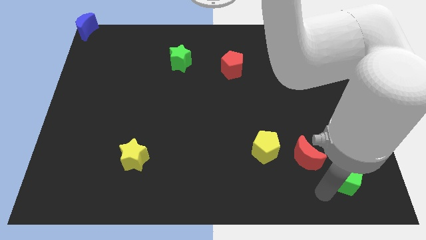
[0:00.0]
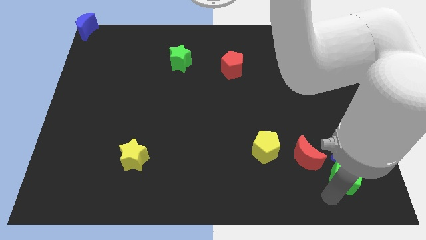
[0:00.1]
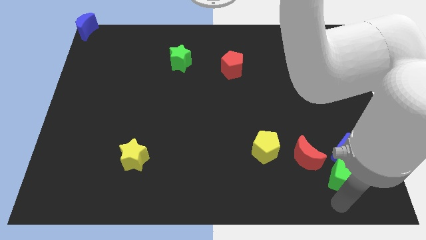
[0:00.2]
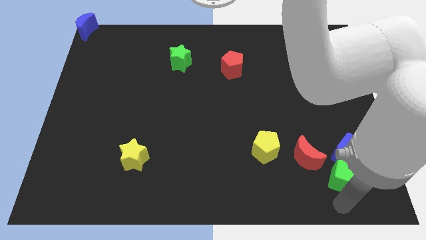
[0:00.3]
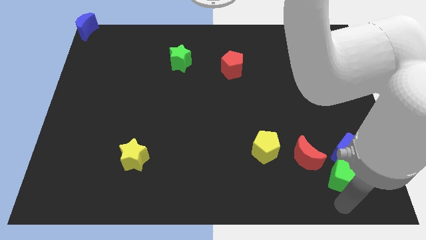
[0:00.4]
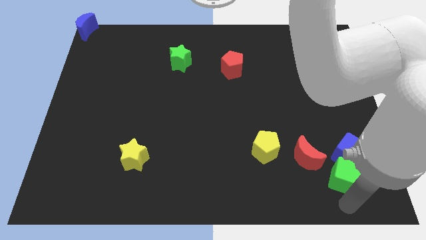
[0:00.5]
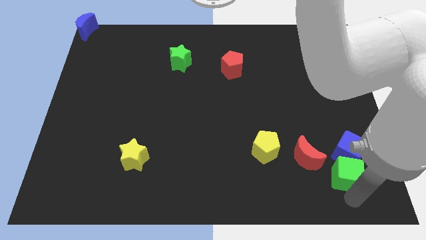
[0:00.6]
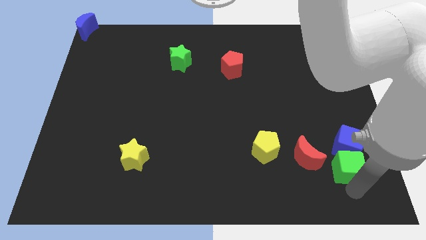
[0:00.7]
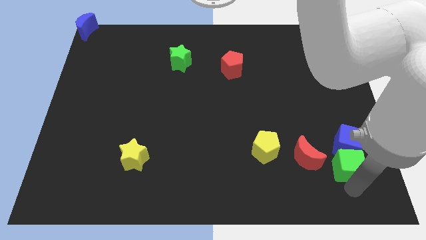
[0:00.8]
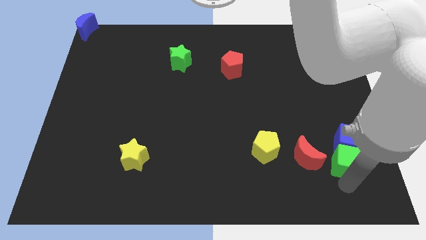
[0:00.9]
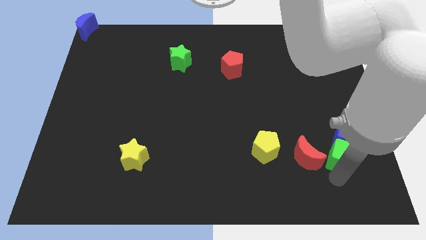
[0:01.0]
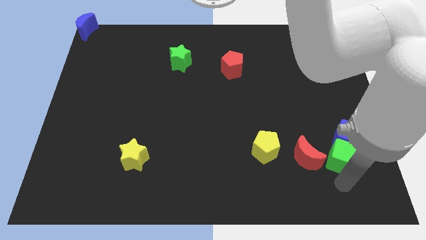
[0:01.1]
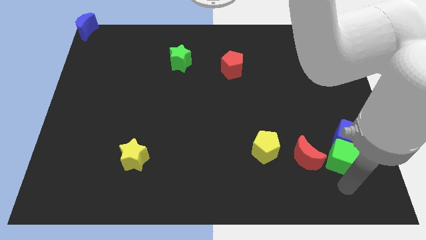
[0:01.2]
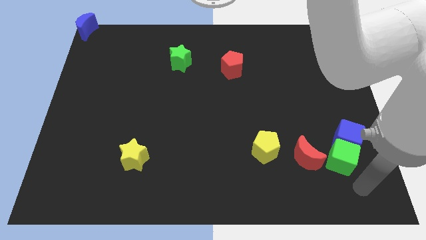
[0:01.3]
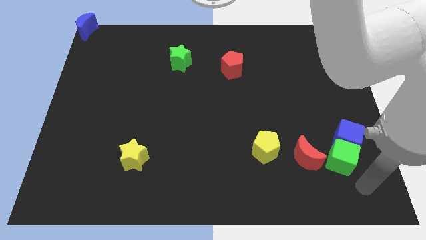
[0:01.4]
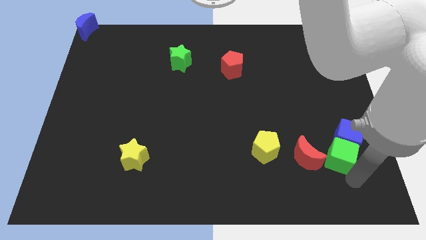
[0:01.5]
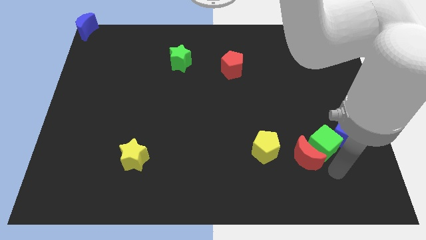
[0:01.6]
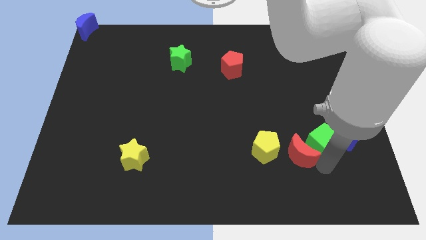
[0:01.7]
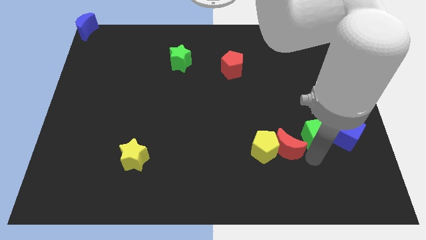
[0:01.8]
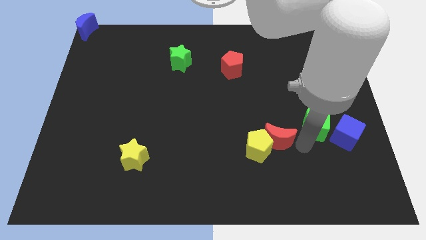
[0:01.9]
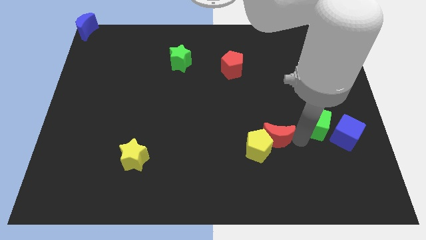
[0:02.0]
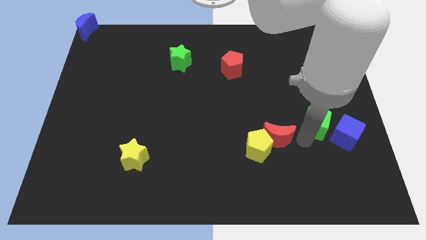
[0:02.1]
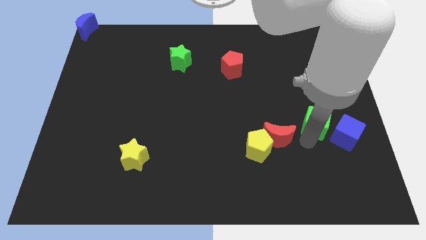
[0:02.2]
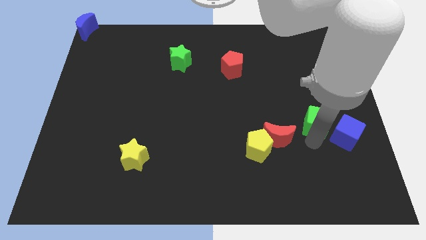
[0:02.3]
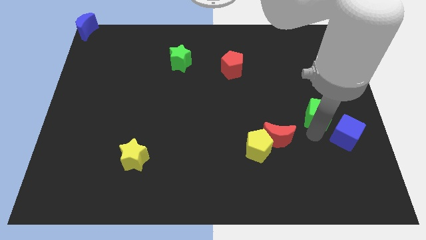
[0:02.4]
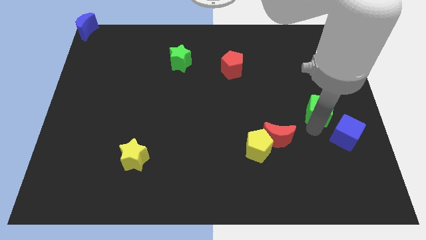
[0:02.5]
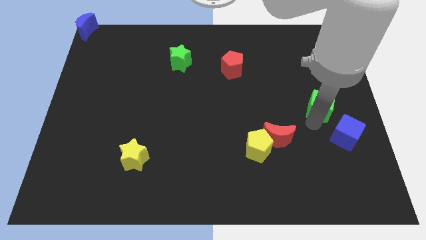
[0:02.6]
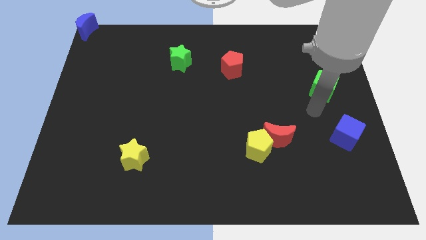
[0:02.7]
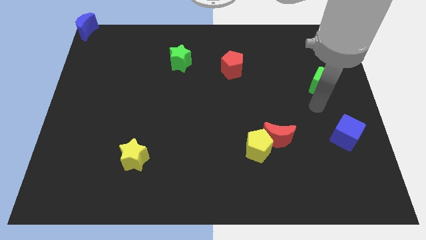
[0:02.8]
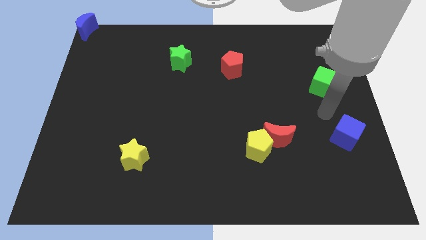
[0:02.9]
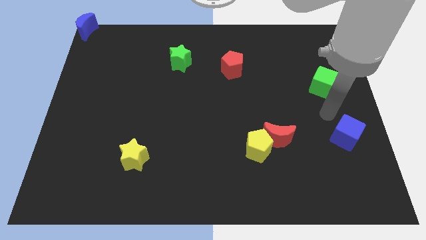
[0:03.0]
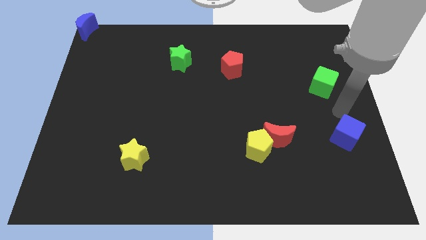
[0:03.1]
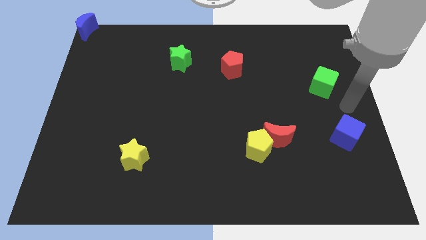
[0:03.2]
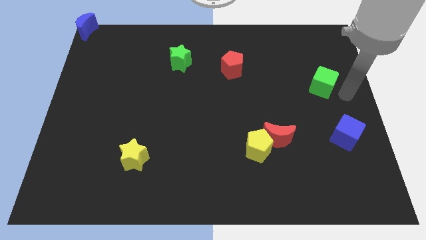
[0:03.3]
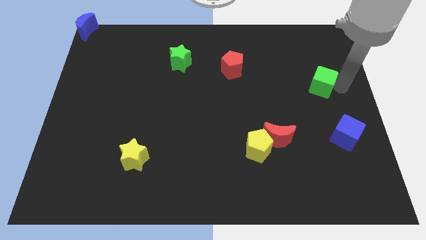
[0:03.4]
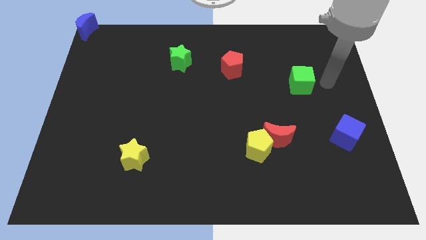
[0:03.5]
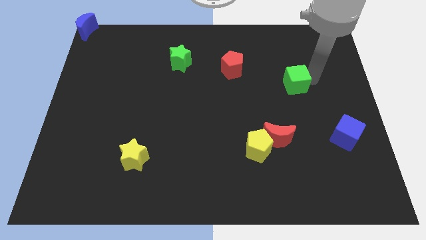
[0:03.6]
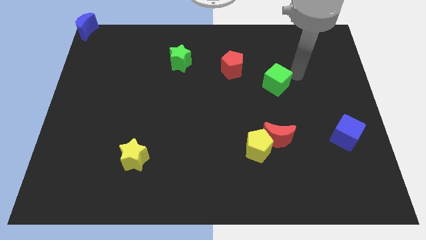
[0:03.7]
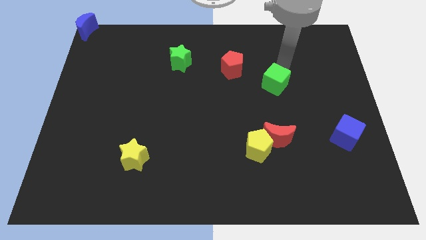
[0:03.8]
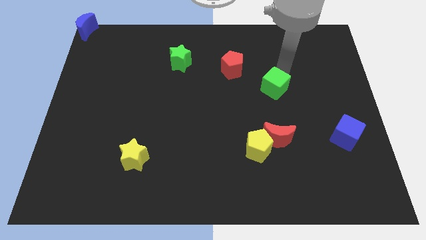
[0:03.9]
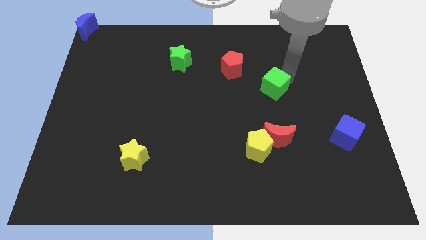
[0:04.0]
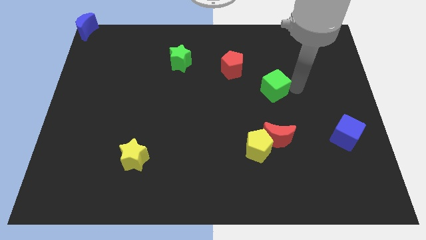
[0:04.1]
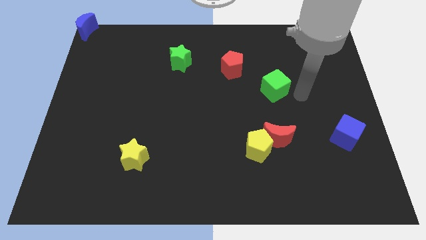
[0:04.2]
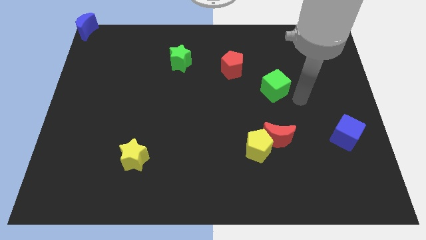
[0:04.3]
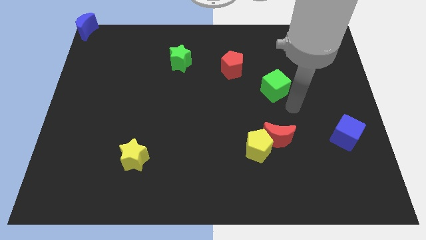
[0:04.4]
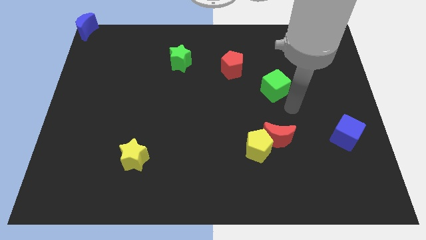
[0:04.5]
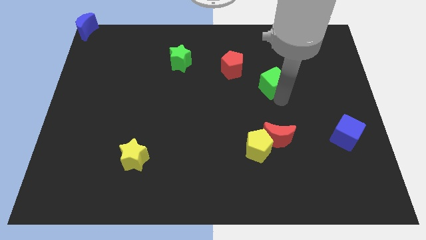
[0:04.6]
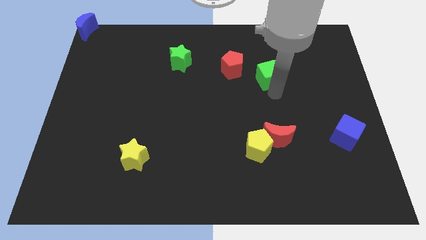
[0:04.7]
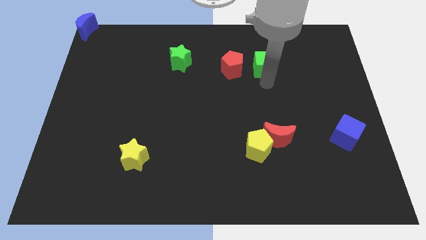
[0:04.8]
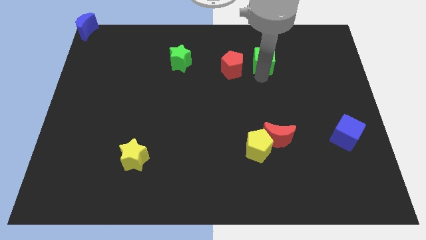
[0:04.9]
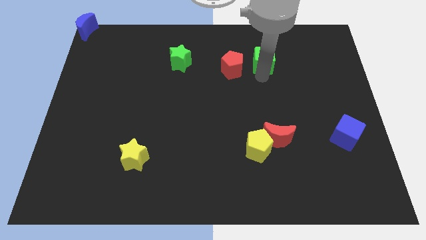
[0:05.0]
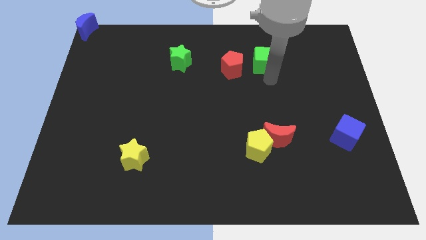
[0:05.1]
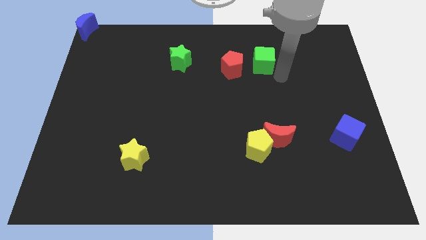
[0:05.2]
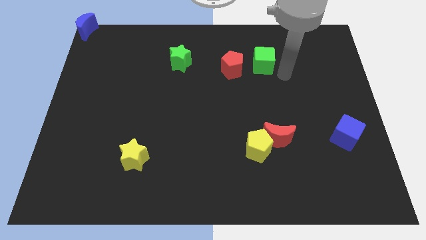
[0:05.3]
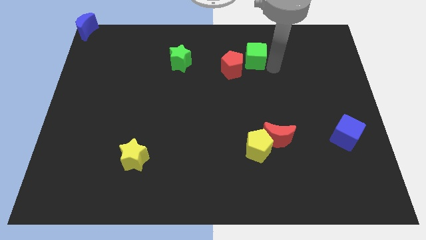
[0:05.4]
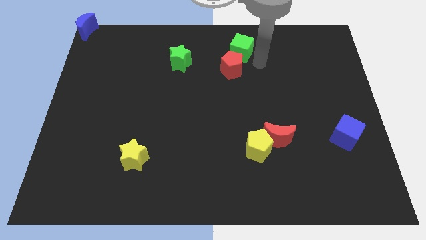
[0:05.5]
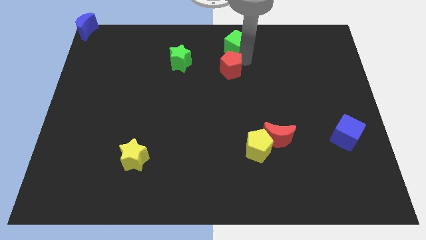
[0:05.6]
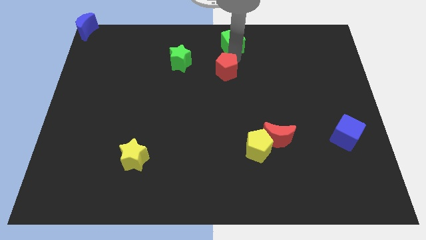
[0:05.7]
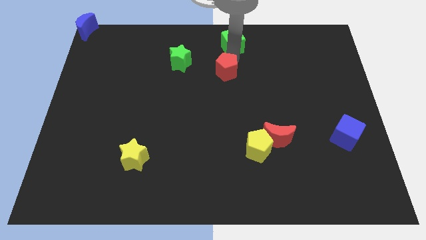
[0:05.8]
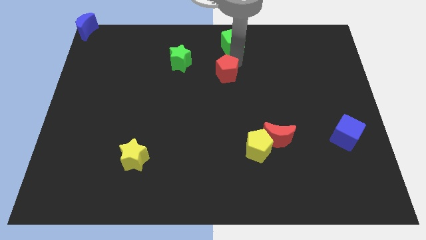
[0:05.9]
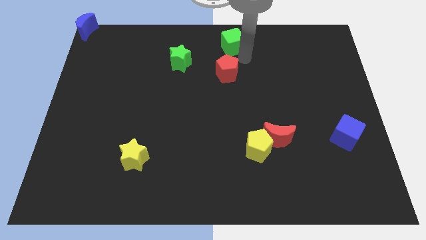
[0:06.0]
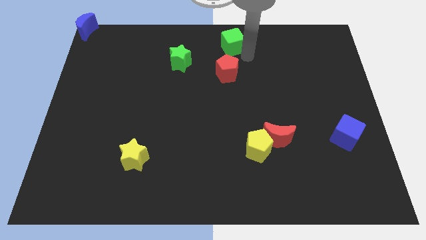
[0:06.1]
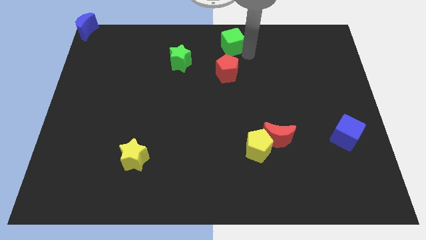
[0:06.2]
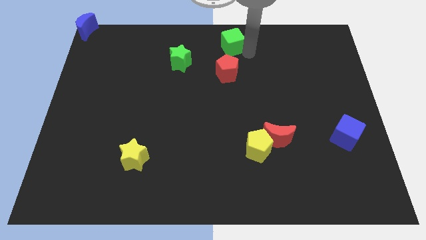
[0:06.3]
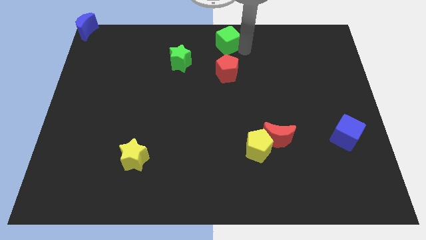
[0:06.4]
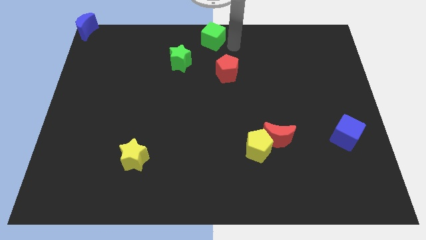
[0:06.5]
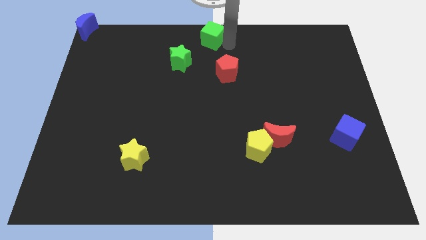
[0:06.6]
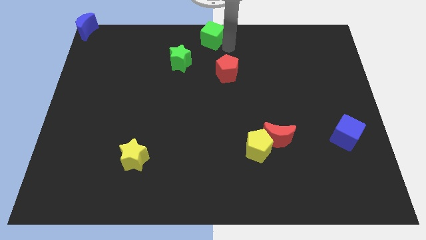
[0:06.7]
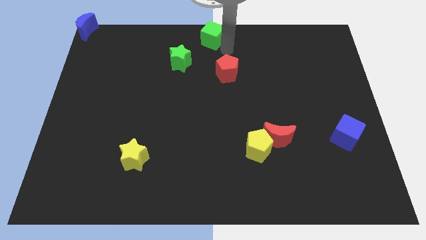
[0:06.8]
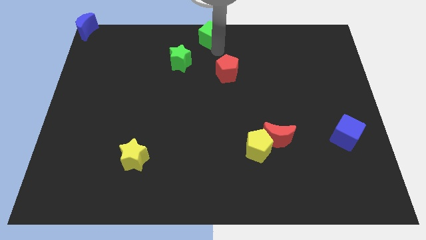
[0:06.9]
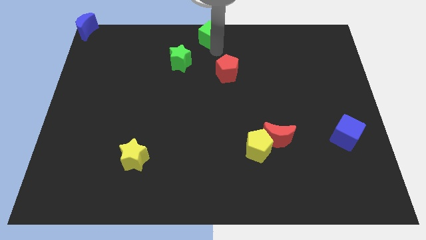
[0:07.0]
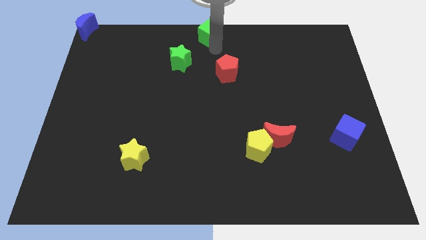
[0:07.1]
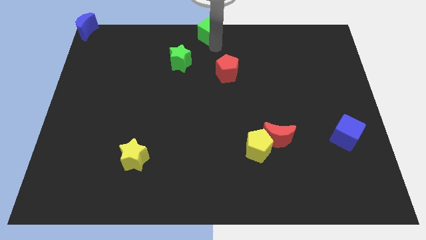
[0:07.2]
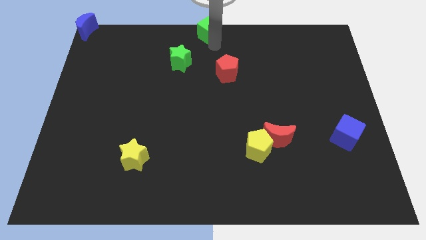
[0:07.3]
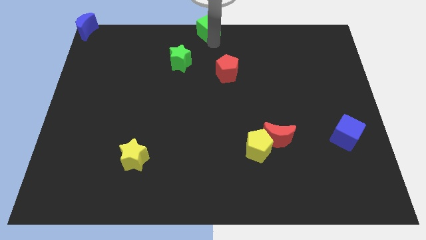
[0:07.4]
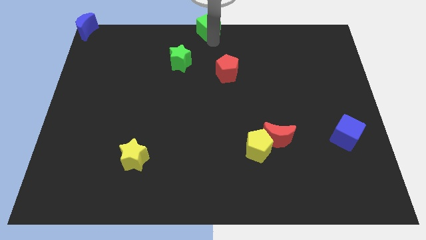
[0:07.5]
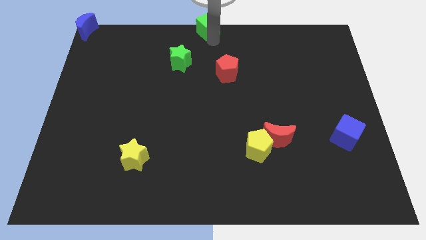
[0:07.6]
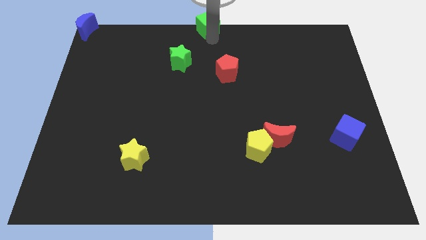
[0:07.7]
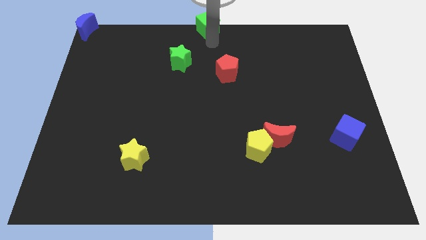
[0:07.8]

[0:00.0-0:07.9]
move the green cube to the top center of the board

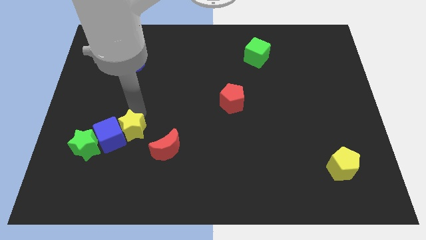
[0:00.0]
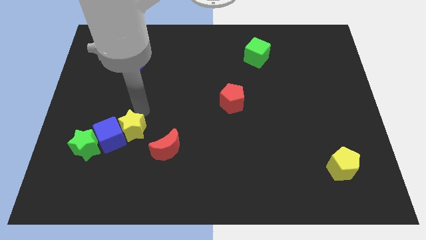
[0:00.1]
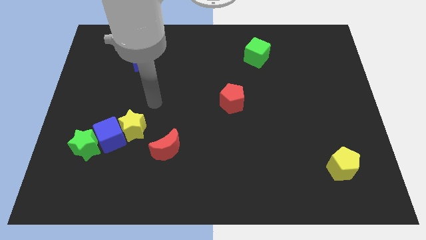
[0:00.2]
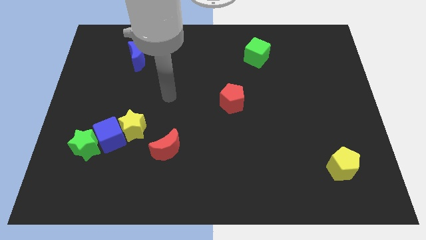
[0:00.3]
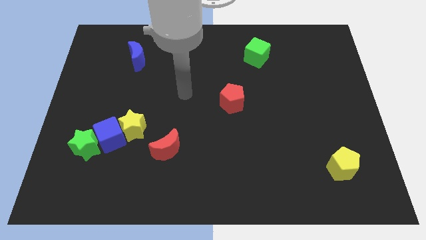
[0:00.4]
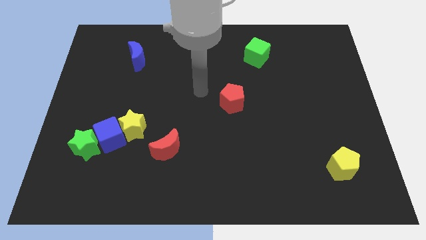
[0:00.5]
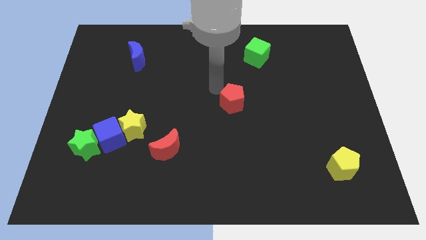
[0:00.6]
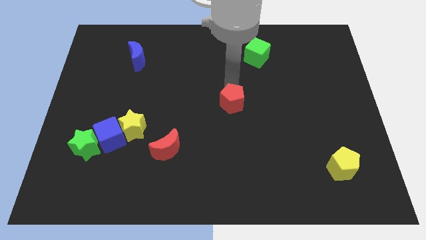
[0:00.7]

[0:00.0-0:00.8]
place your hand on top of the red pentagon

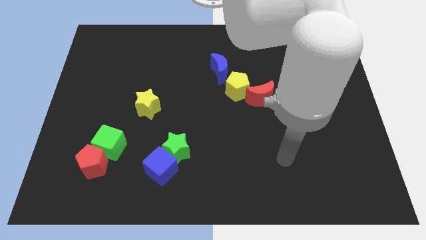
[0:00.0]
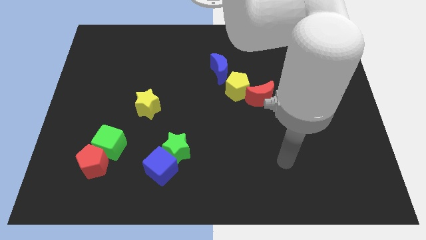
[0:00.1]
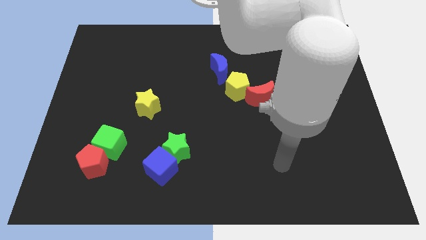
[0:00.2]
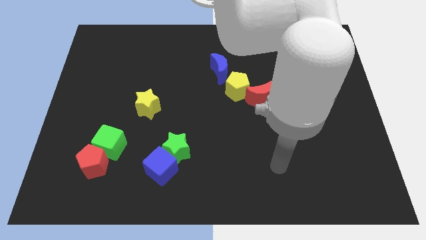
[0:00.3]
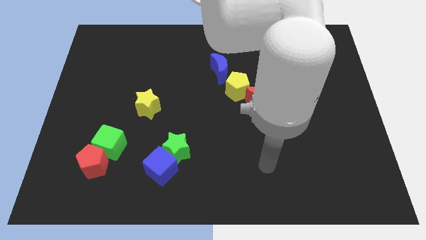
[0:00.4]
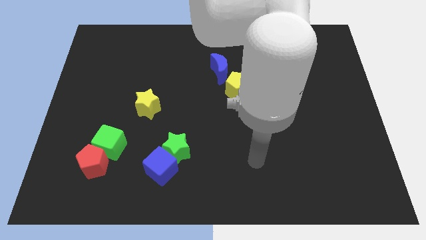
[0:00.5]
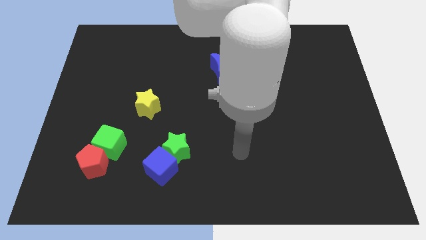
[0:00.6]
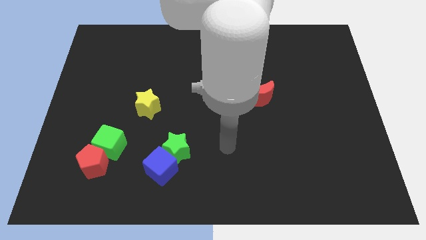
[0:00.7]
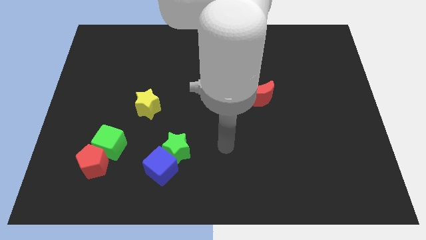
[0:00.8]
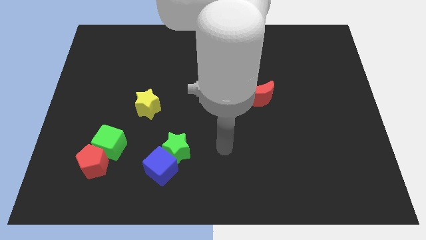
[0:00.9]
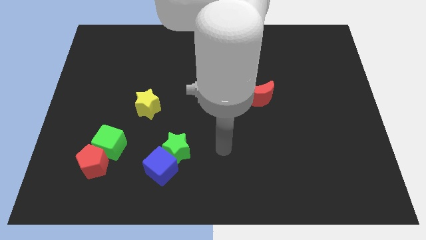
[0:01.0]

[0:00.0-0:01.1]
move your arm slightly towards the green star
